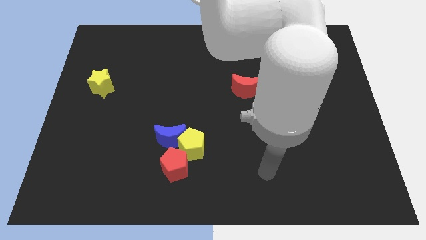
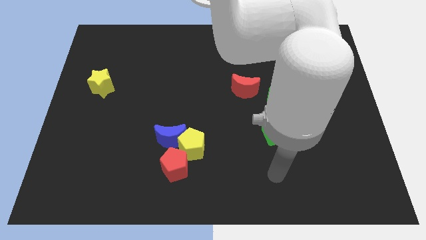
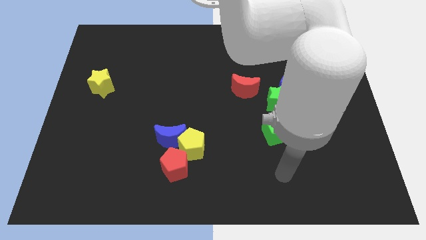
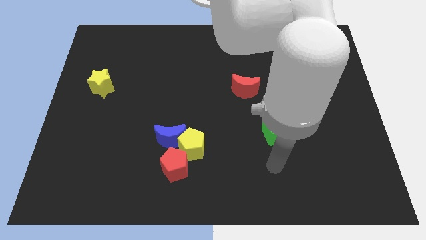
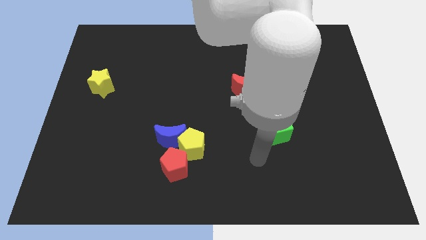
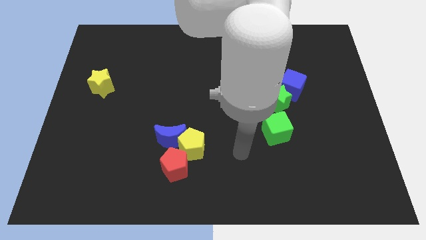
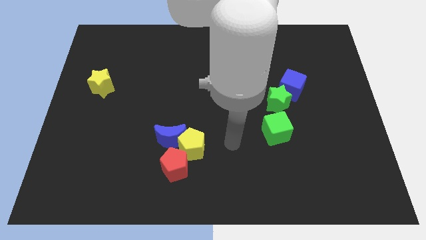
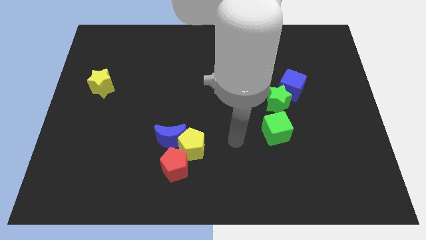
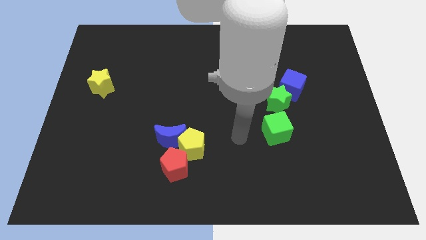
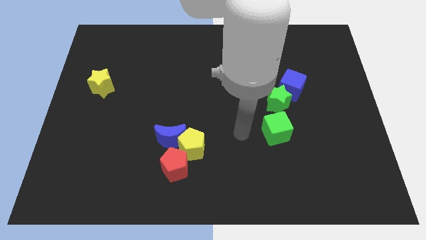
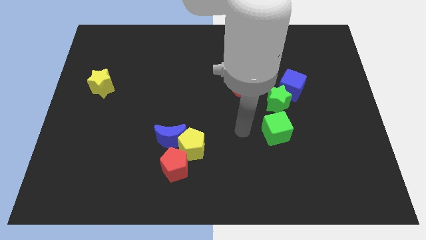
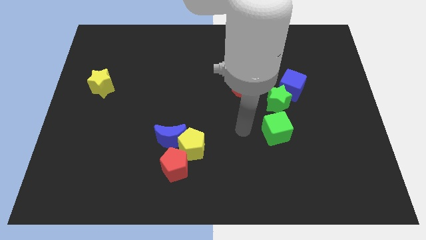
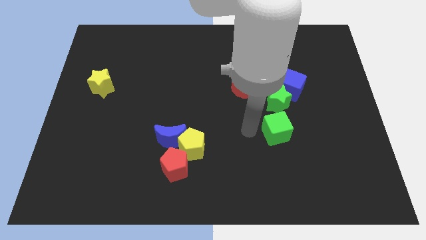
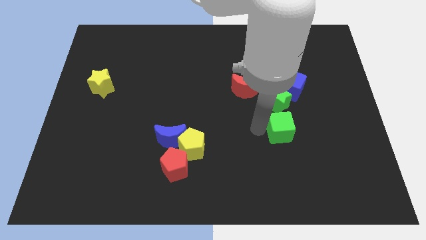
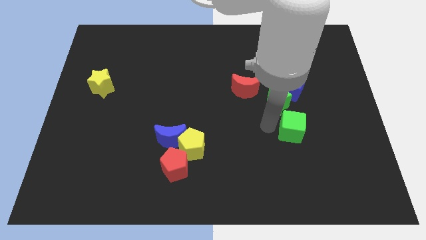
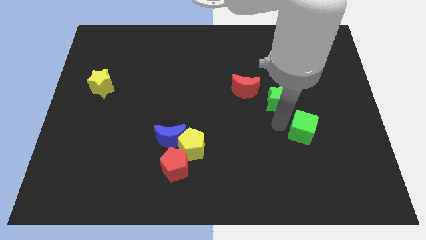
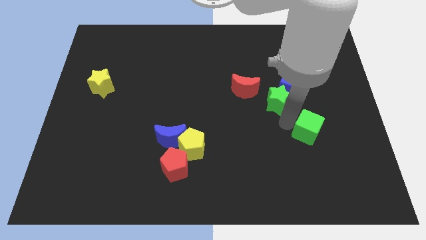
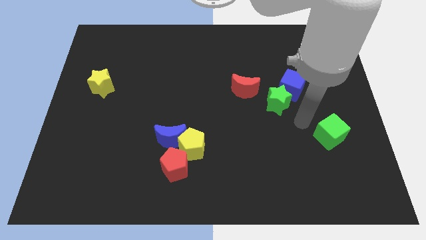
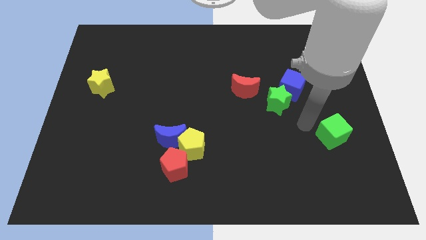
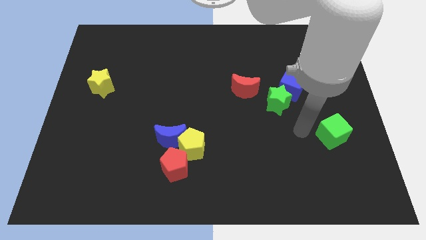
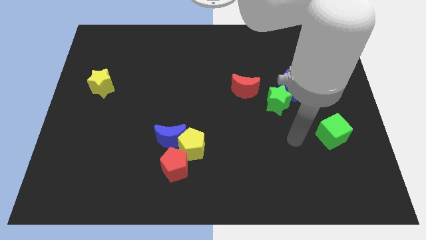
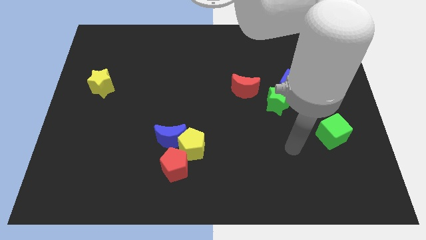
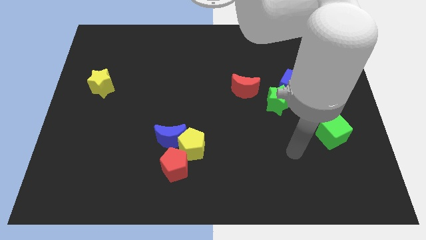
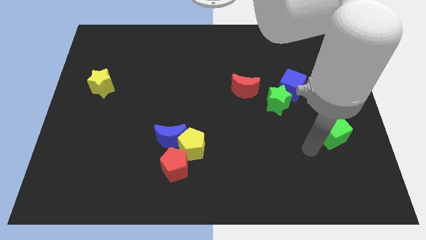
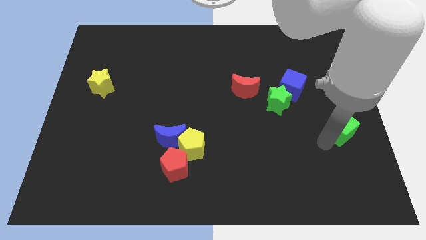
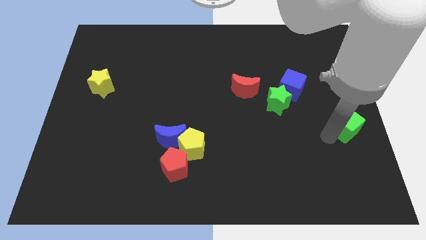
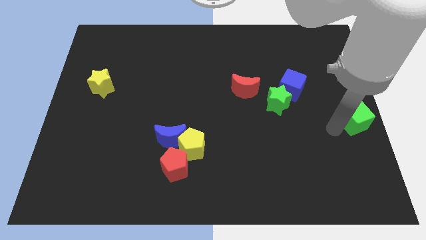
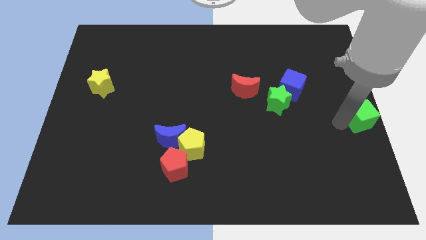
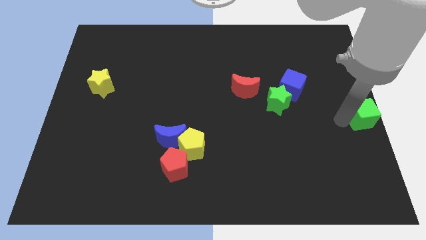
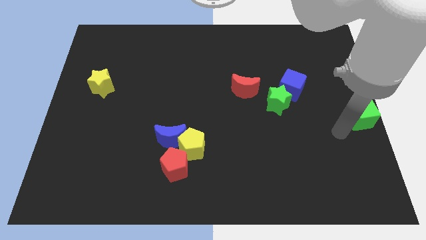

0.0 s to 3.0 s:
push the green cube to the right side of the board

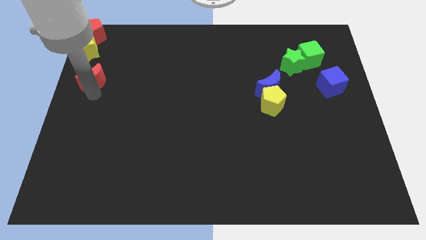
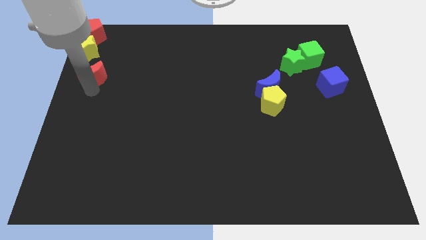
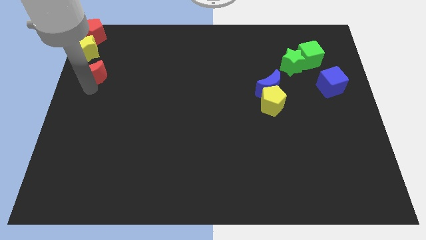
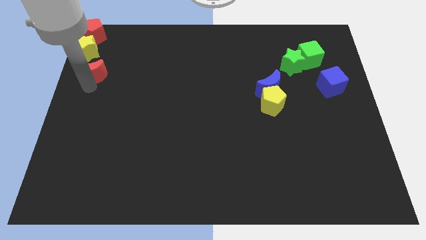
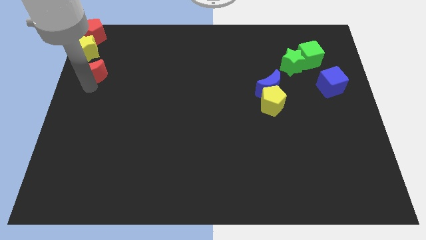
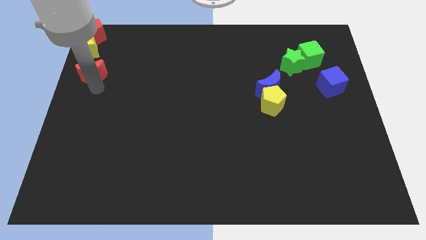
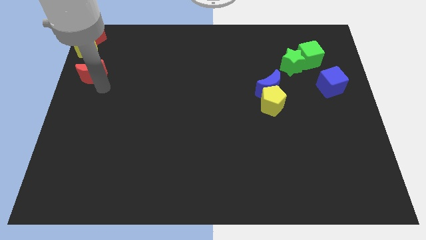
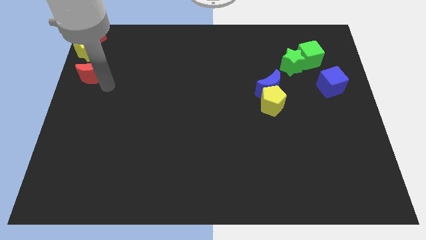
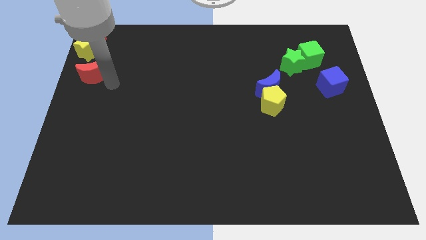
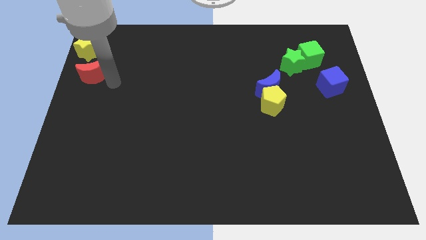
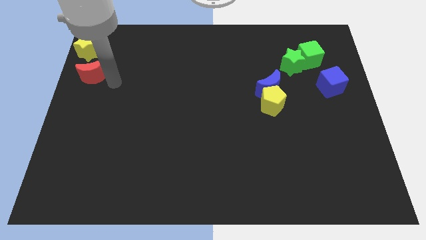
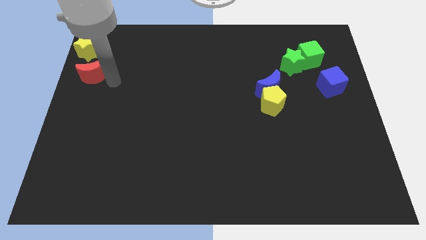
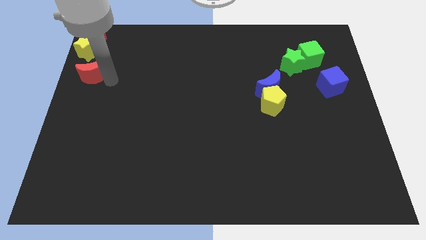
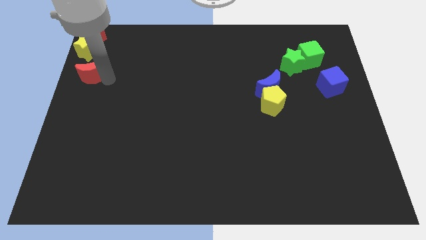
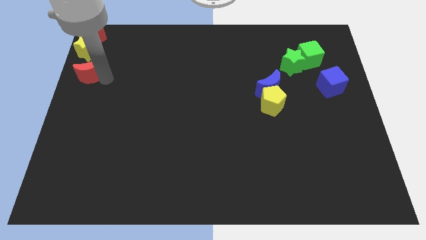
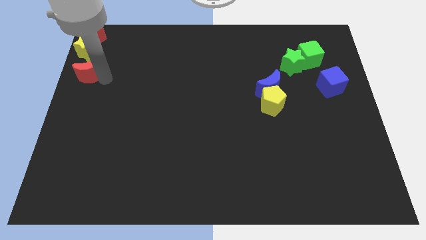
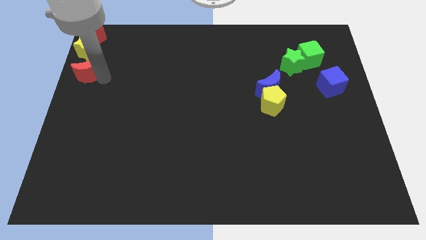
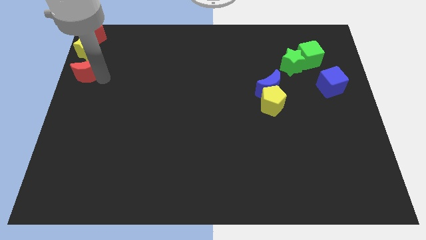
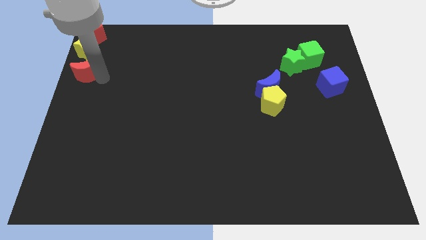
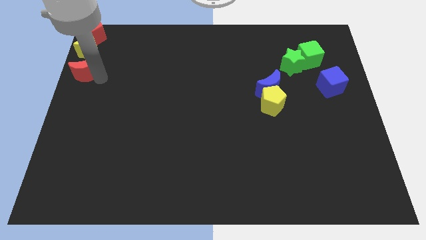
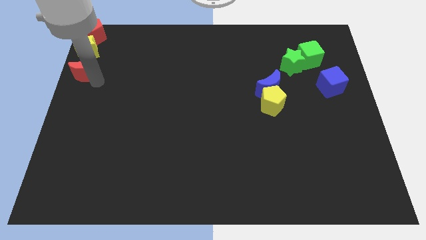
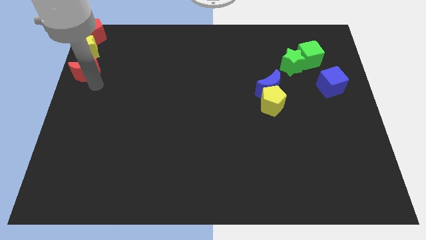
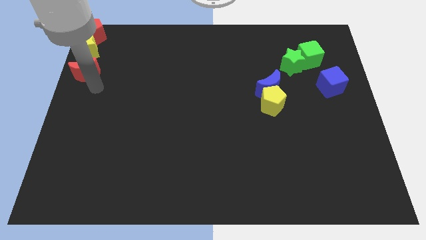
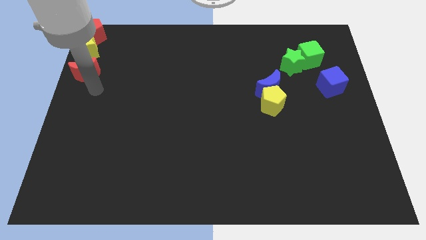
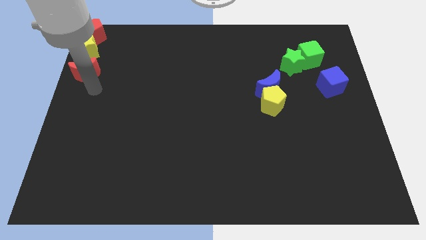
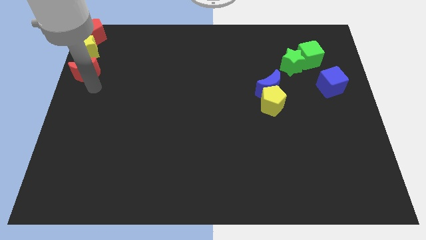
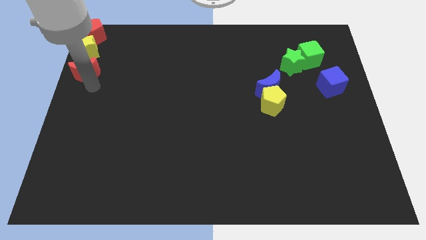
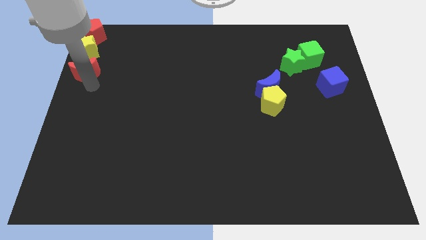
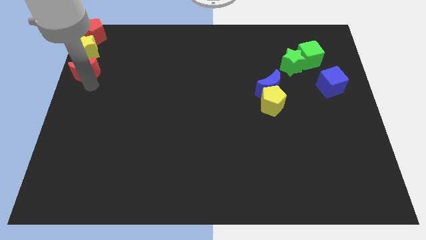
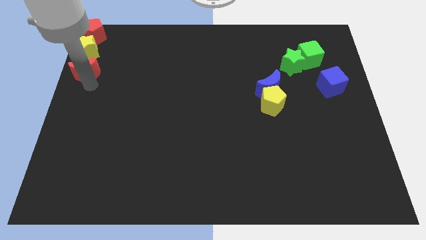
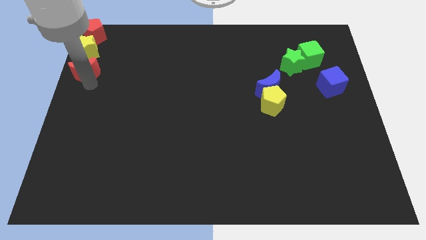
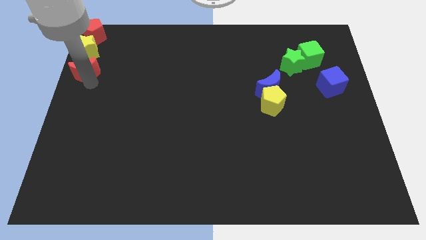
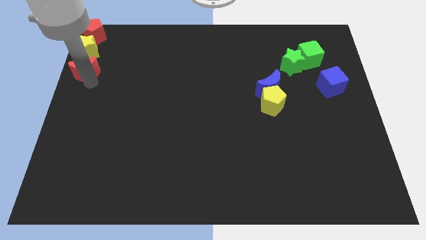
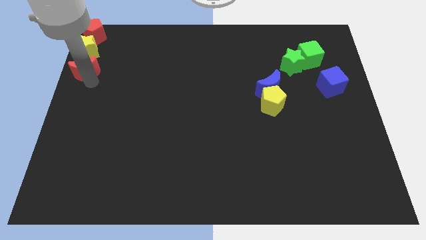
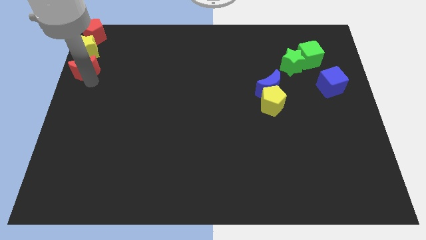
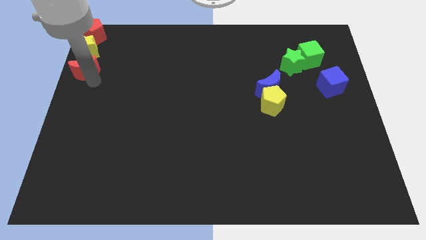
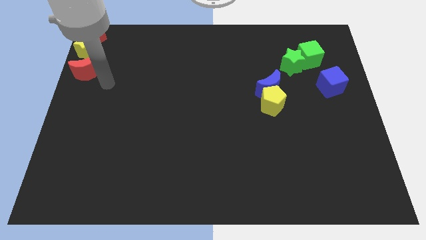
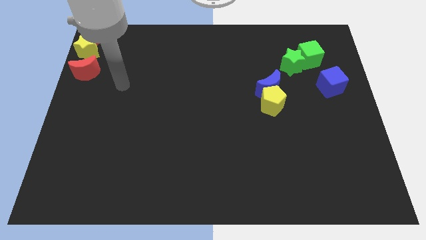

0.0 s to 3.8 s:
move the red moon below the yellow star

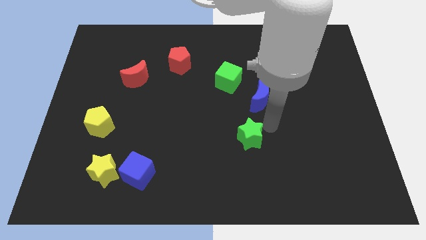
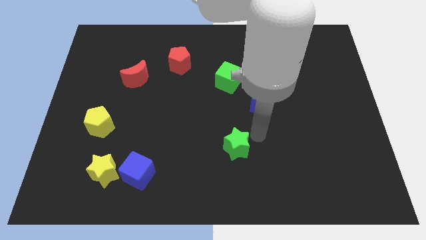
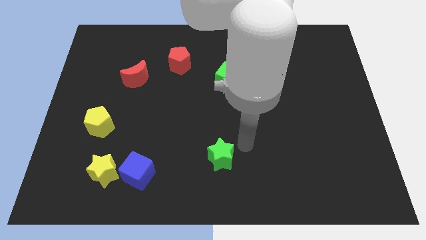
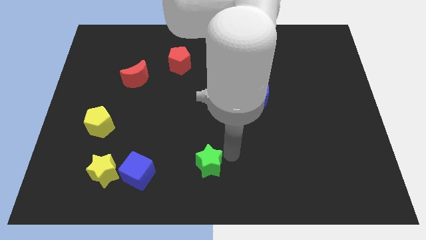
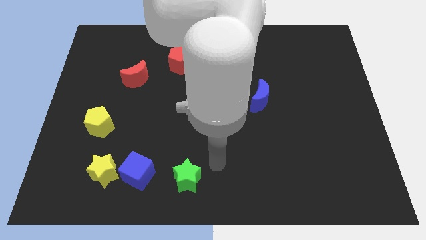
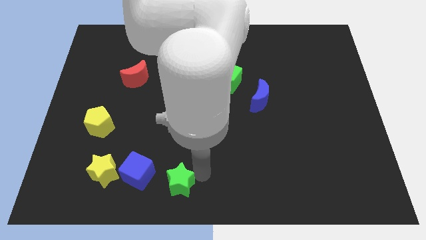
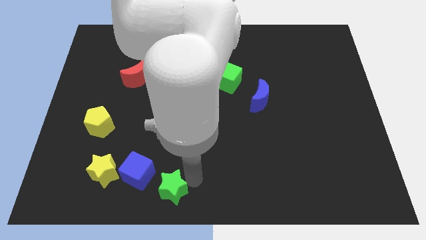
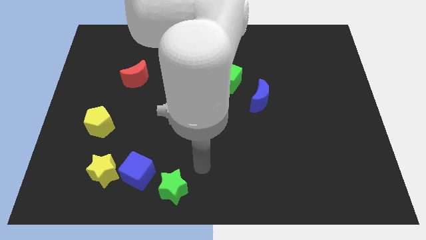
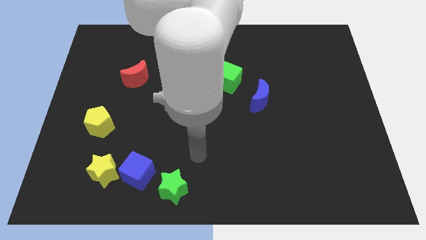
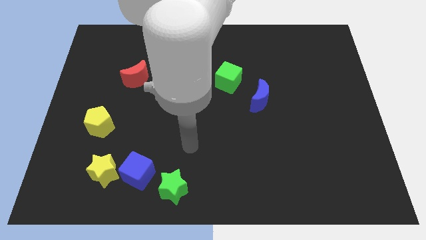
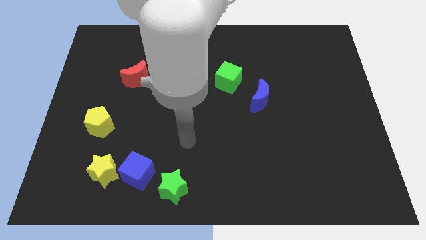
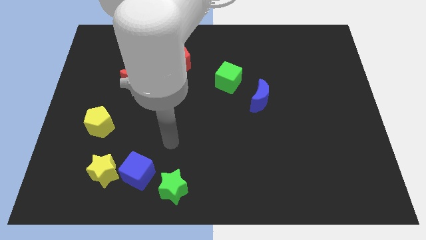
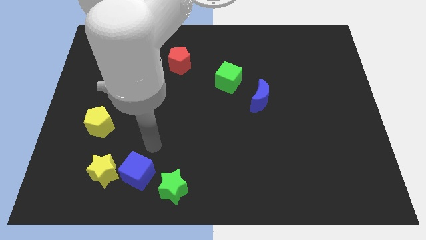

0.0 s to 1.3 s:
push green star towards the blue cube

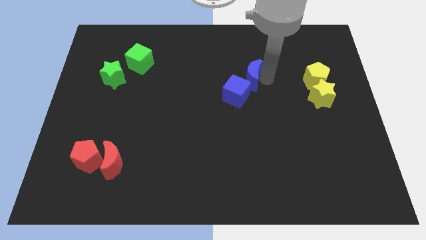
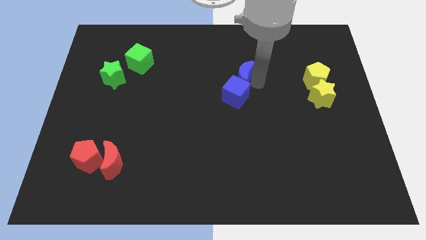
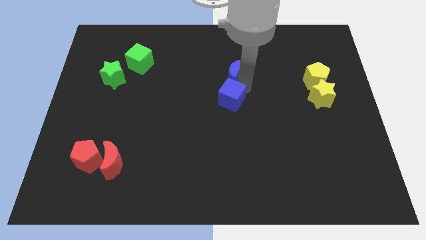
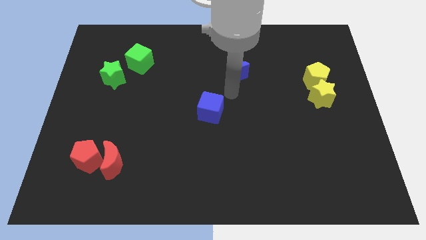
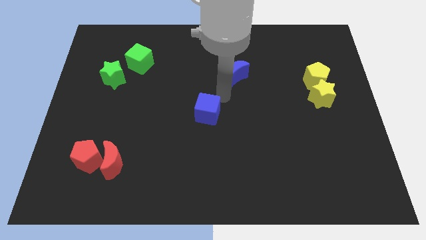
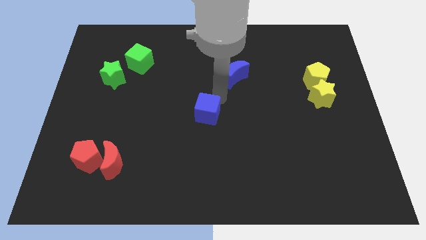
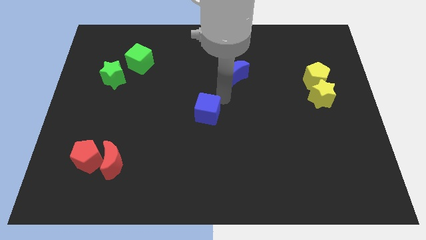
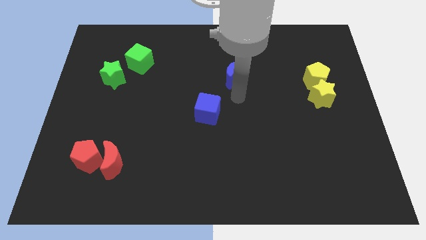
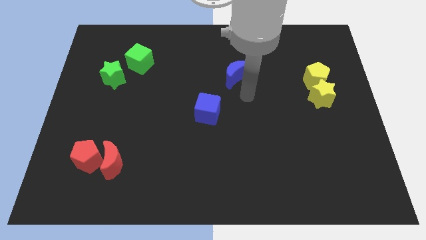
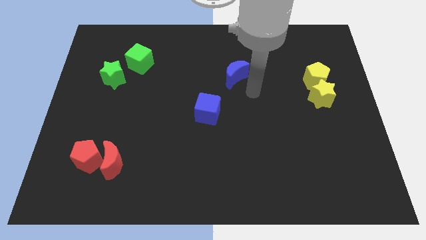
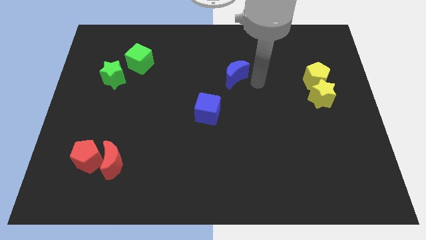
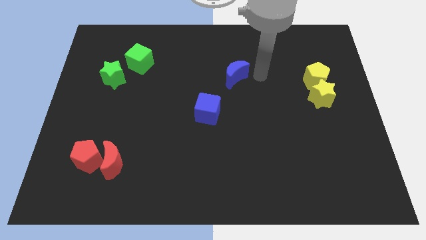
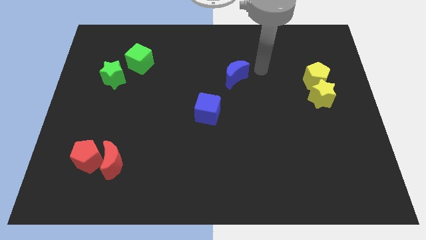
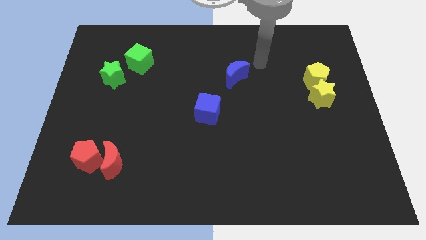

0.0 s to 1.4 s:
separate the blue block from blue crescent
